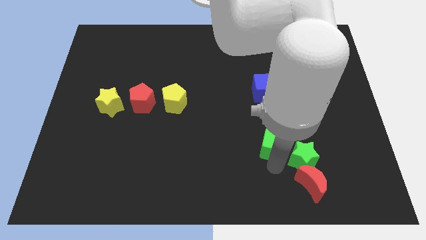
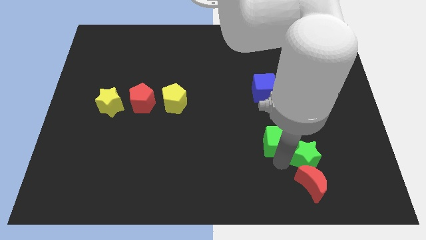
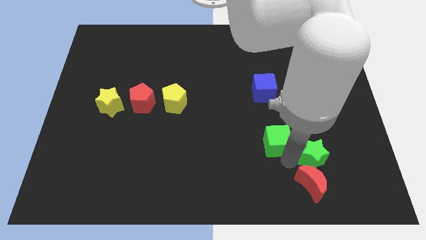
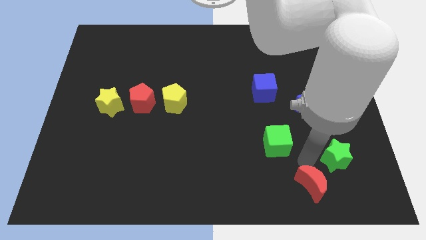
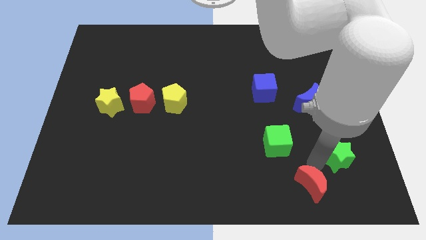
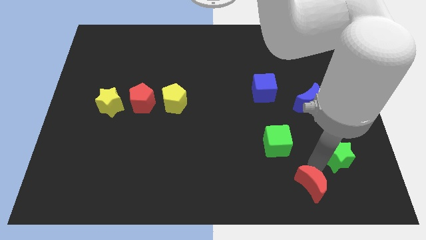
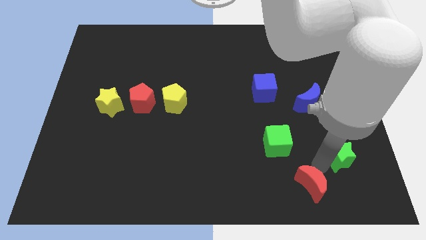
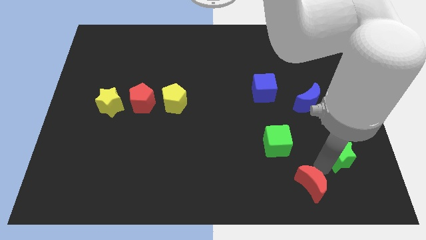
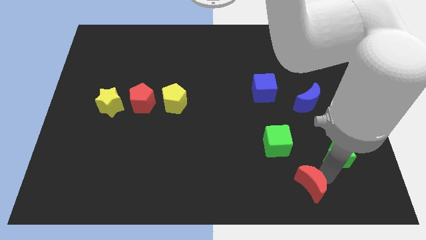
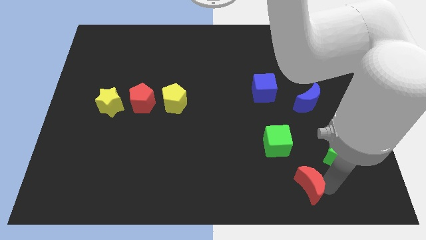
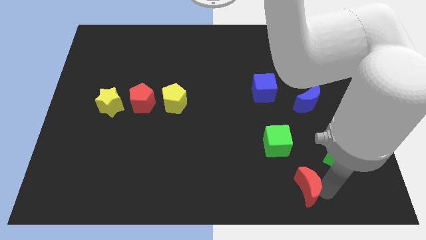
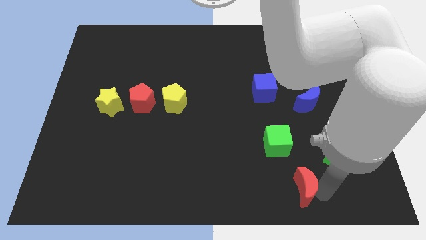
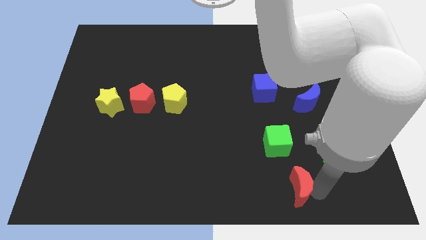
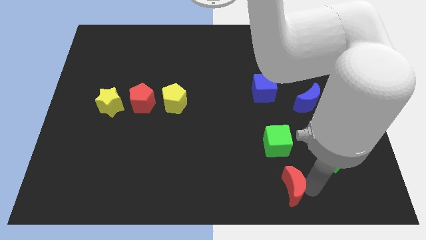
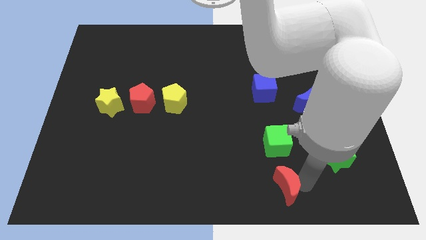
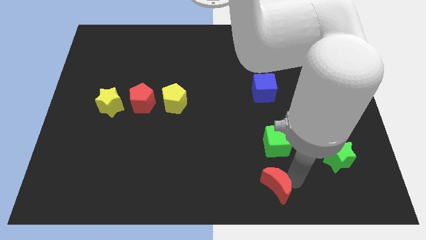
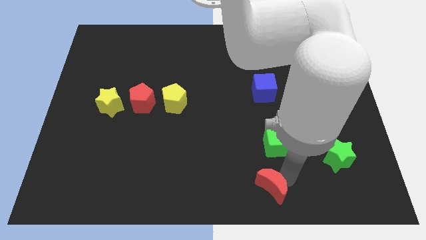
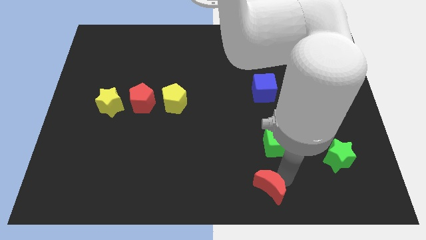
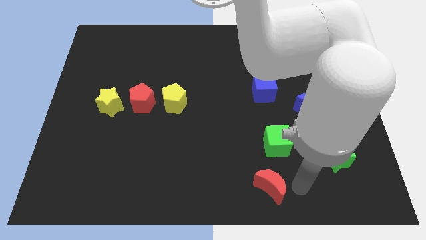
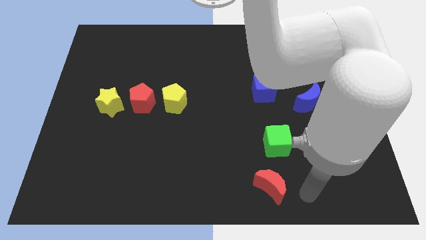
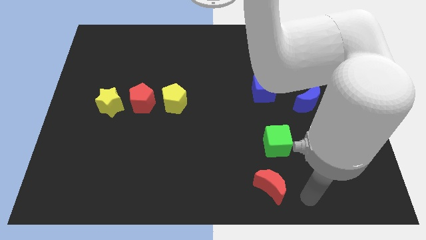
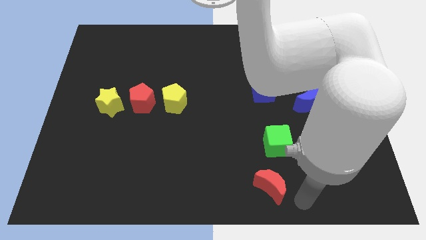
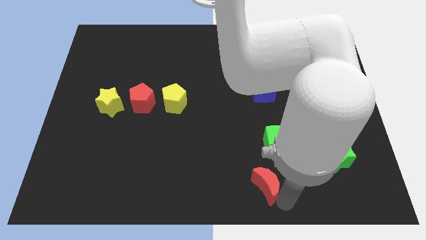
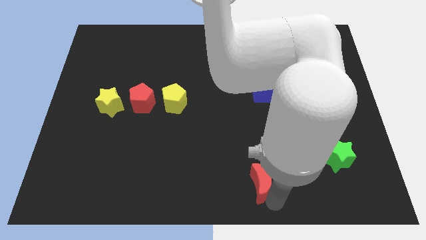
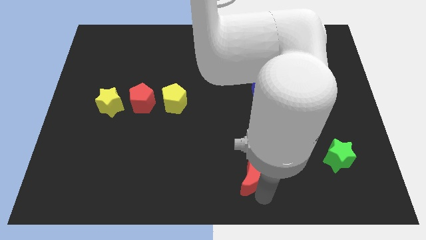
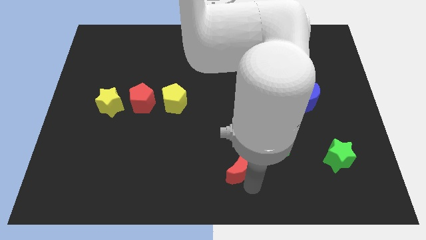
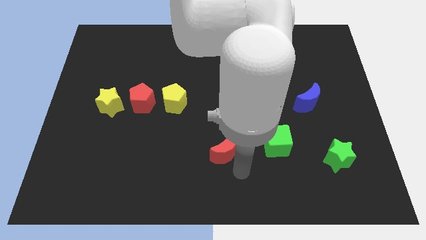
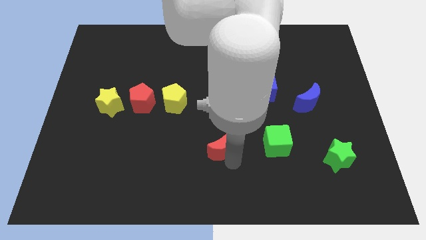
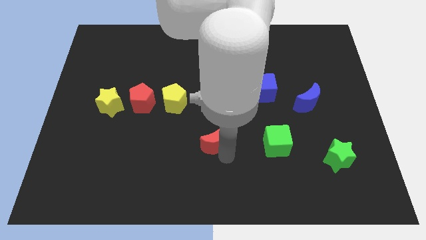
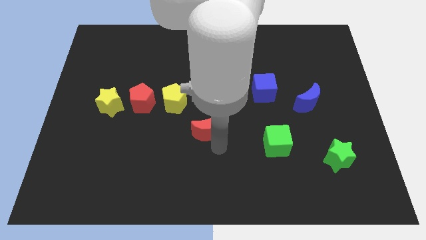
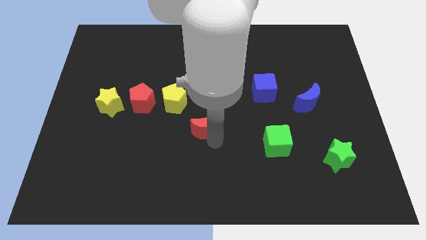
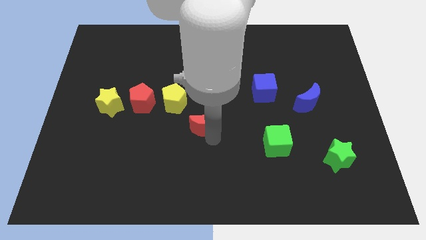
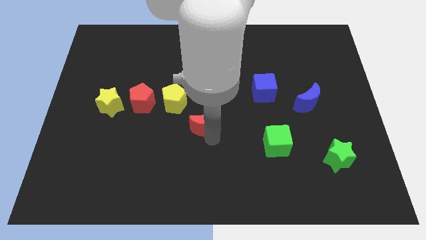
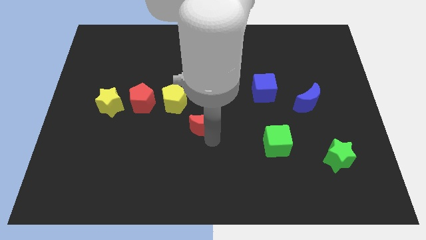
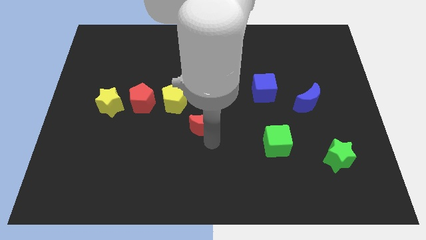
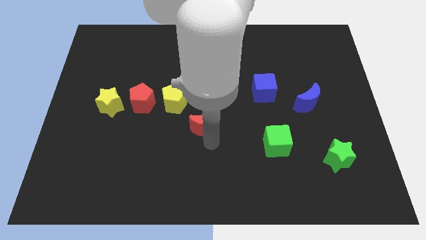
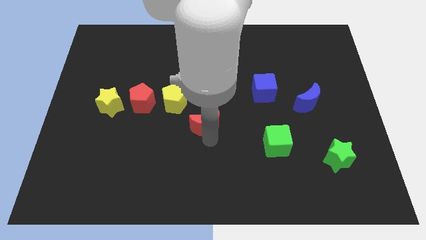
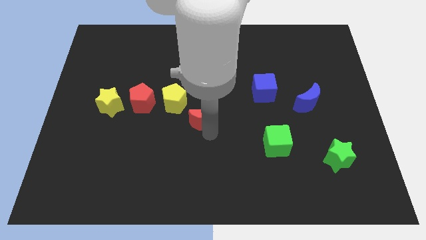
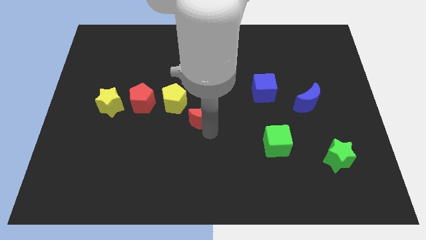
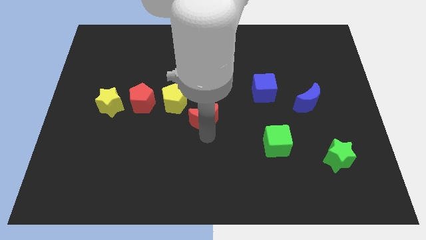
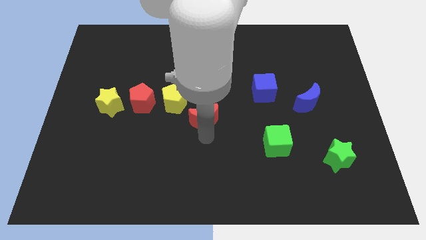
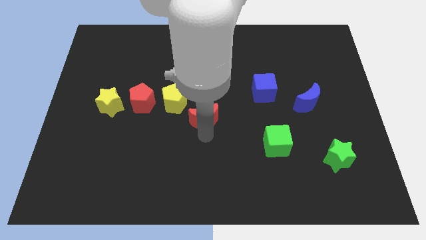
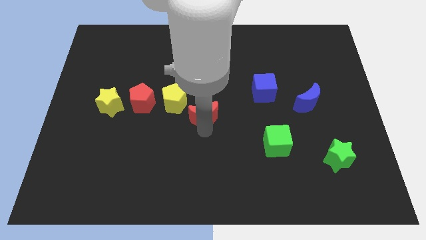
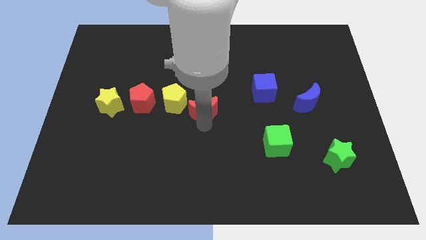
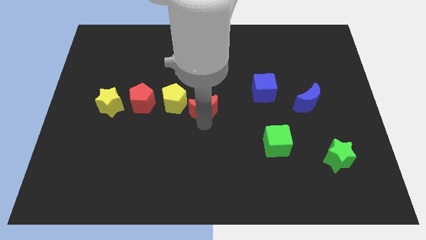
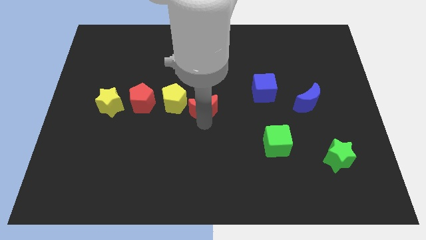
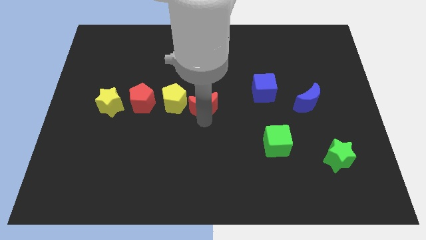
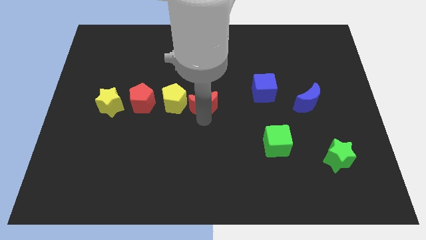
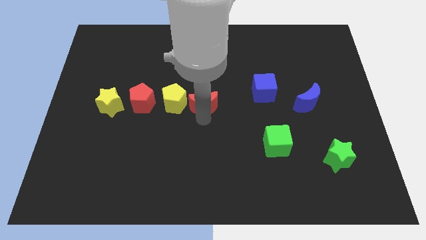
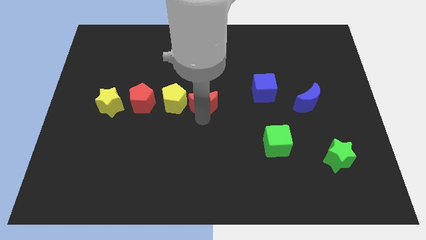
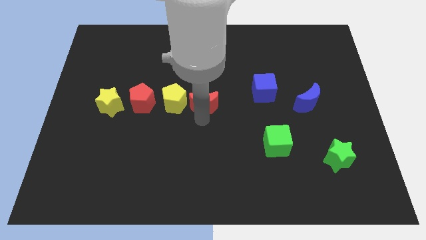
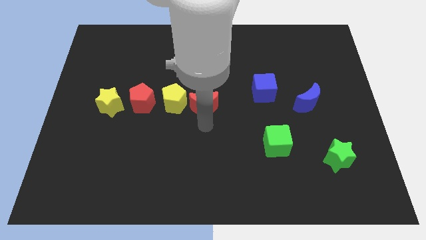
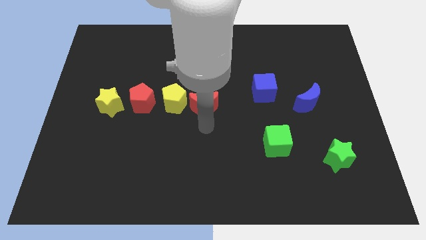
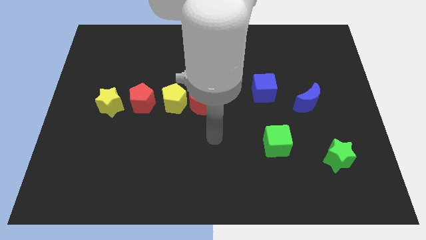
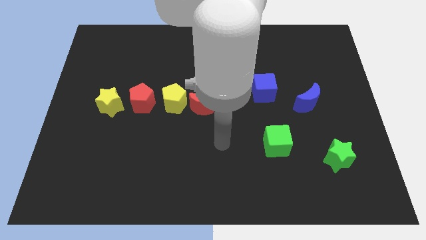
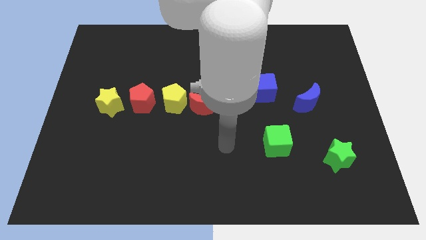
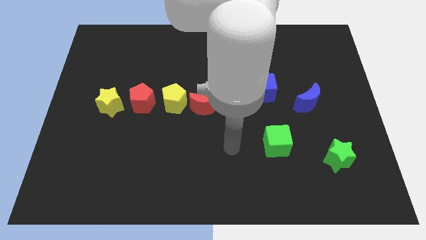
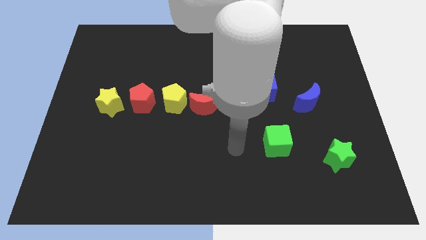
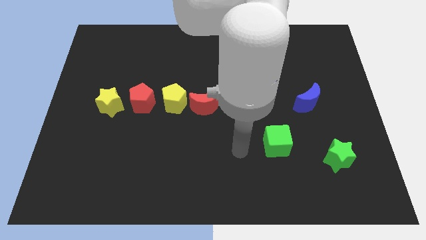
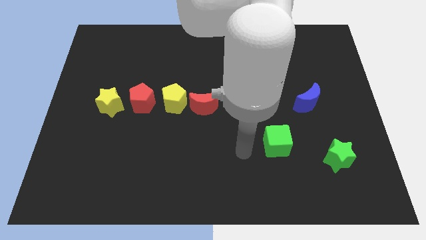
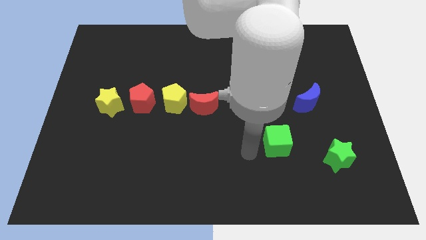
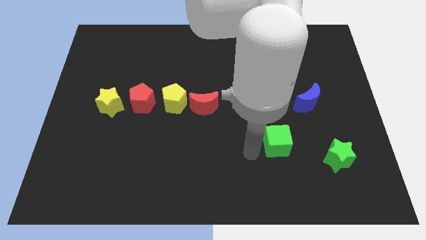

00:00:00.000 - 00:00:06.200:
move the red crescent to the right of the yellow pentagon

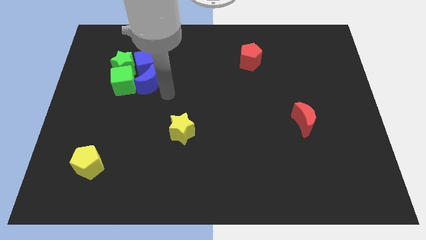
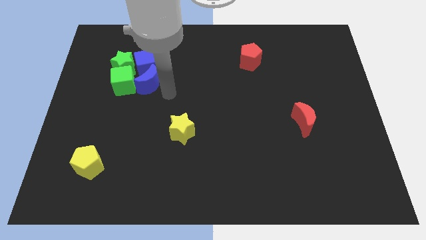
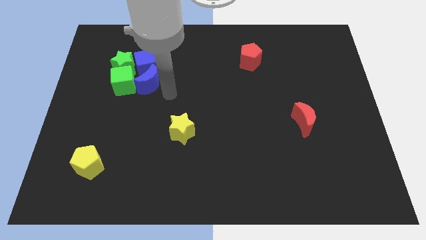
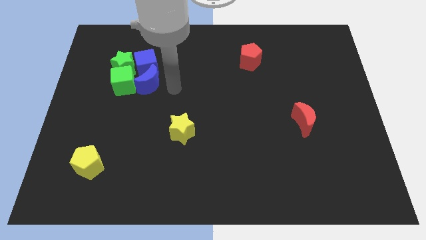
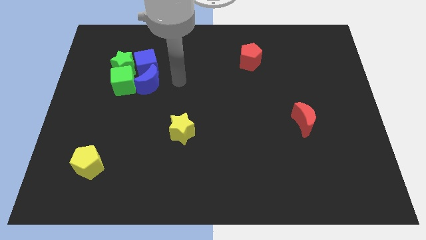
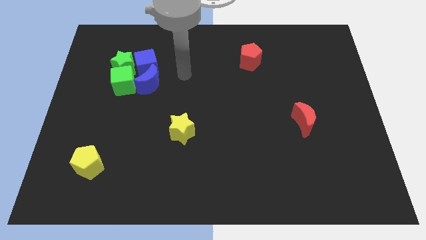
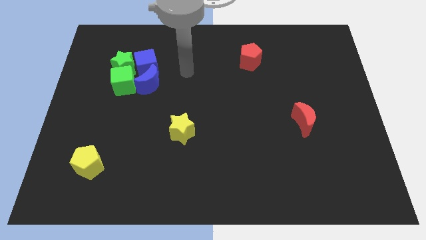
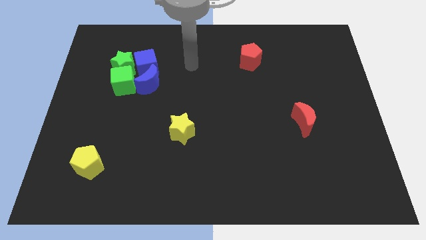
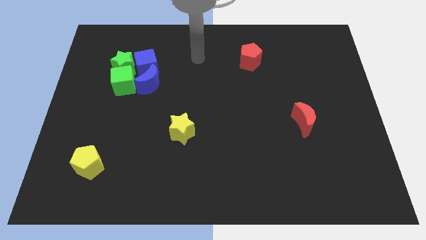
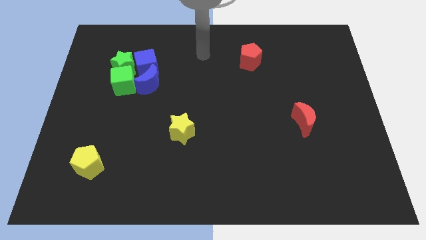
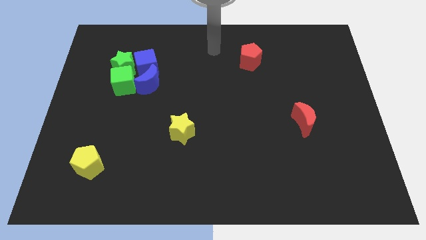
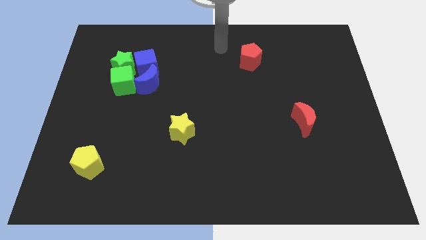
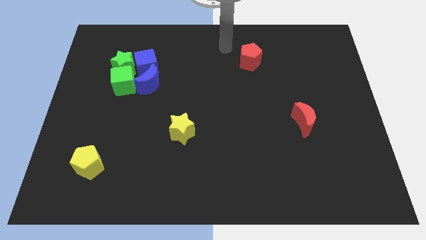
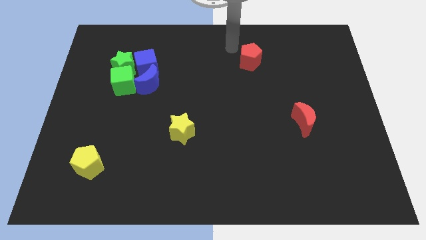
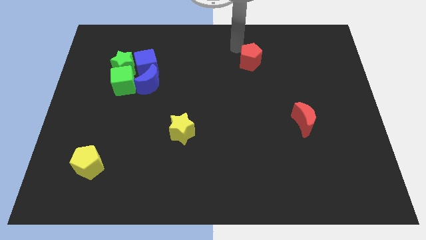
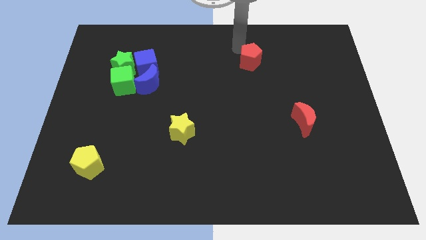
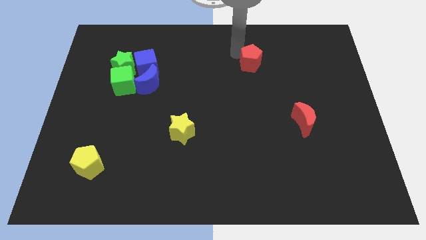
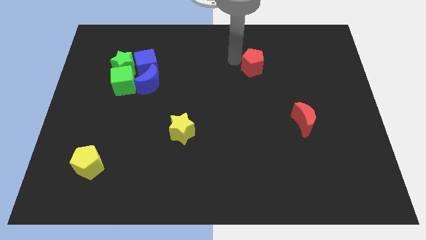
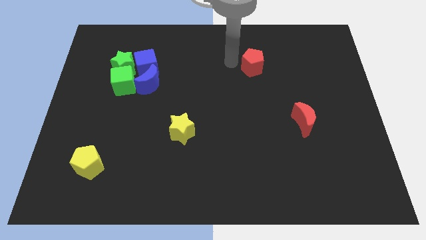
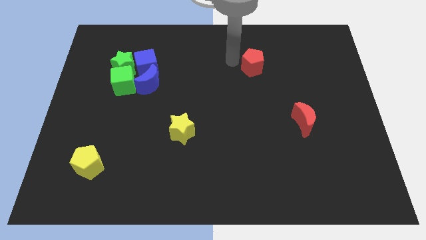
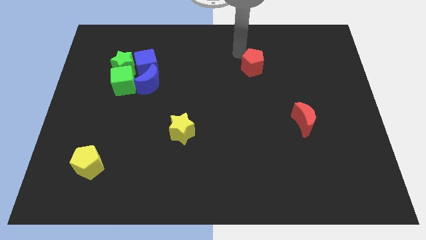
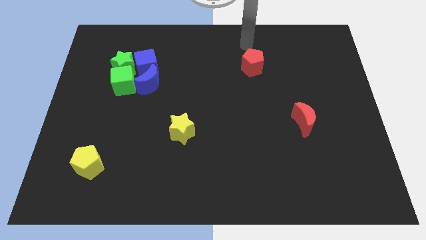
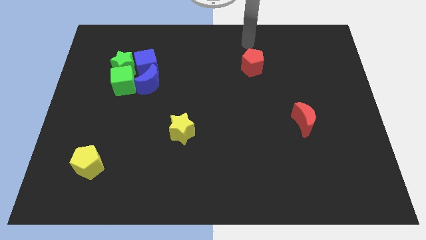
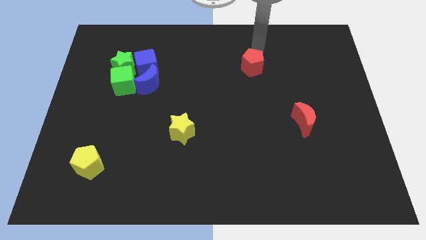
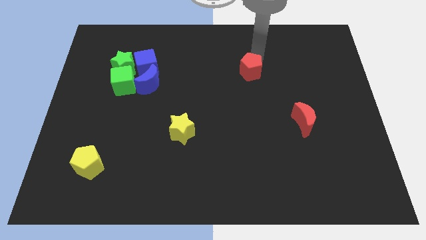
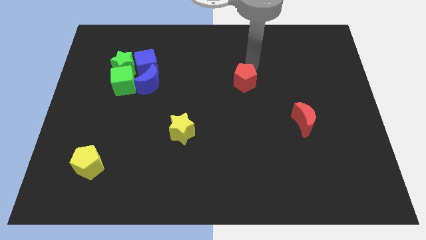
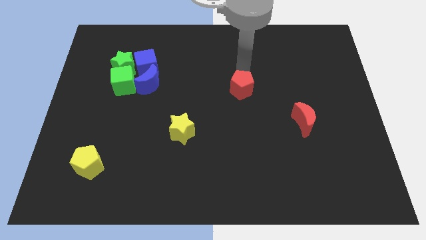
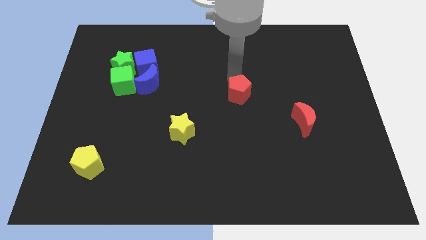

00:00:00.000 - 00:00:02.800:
place the red pentagon diagonally to the yellow star
